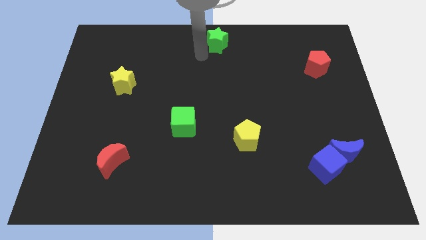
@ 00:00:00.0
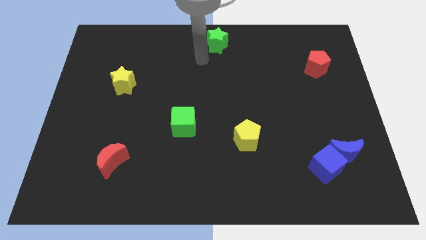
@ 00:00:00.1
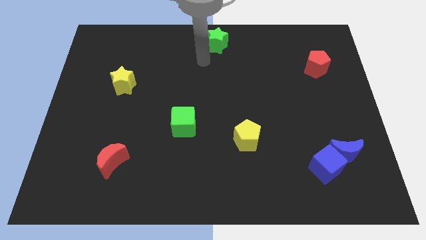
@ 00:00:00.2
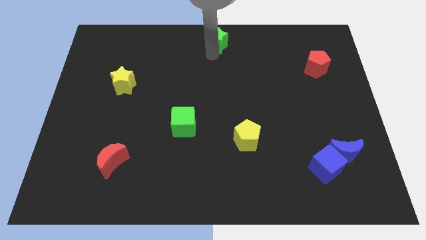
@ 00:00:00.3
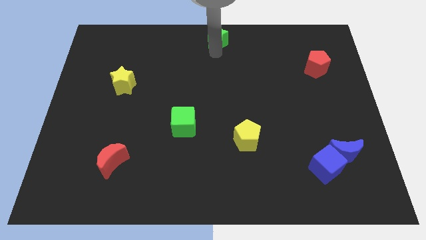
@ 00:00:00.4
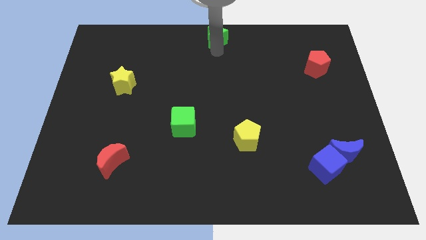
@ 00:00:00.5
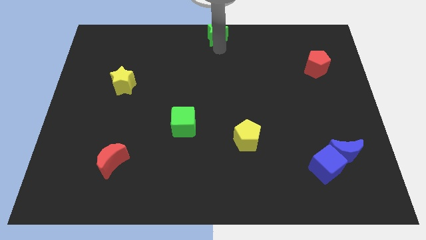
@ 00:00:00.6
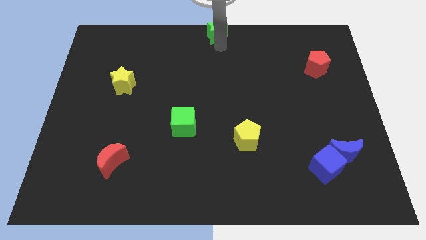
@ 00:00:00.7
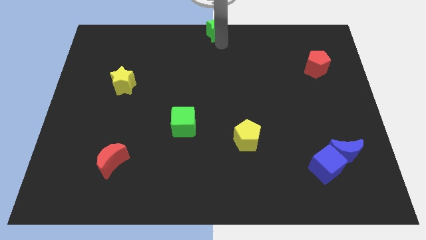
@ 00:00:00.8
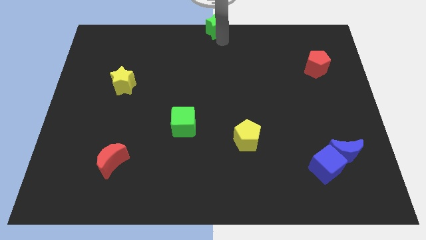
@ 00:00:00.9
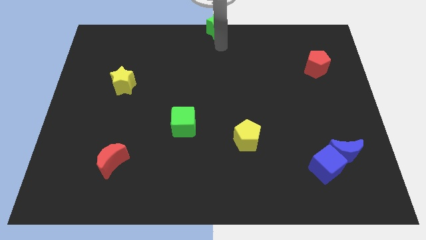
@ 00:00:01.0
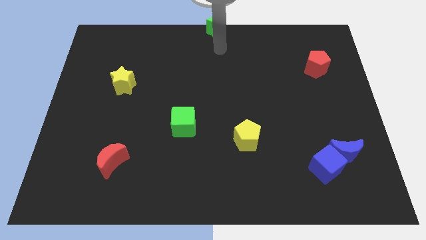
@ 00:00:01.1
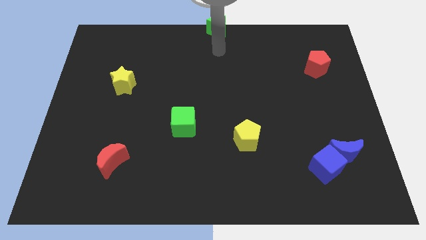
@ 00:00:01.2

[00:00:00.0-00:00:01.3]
put the green star at the top center of the board

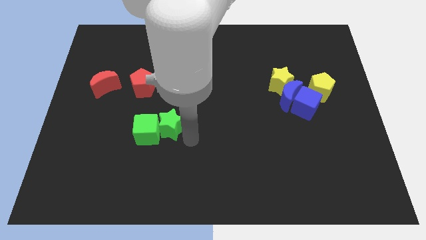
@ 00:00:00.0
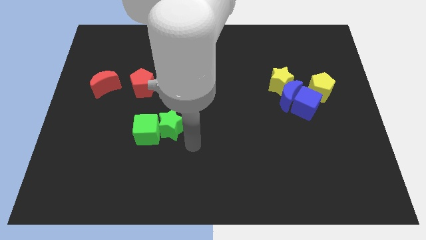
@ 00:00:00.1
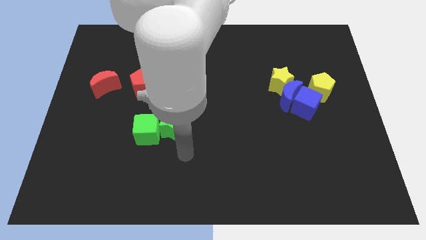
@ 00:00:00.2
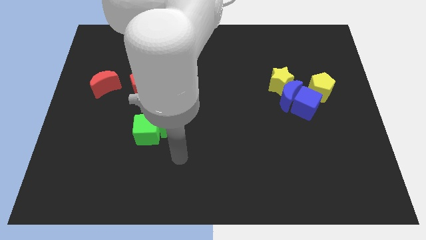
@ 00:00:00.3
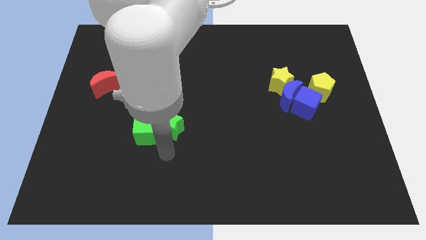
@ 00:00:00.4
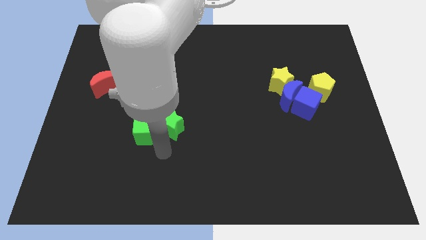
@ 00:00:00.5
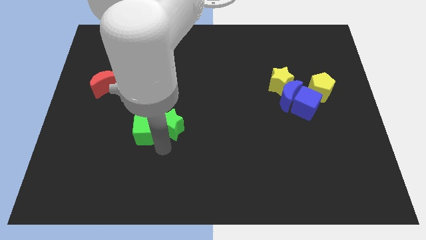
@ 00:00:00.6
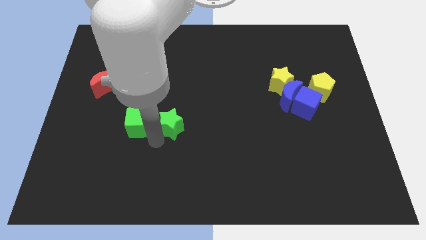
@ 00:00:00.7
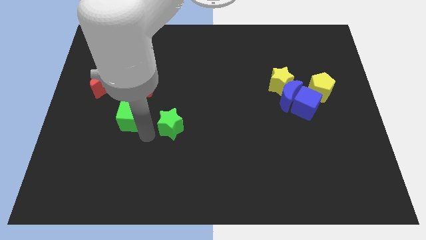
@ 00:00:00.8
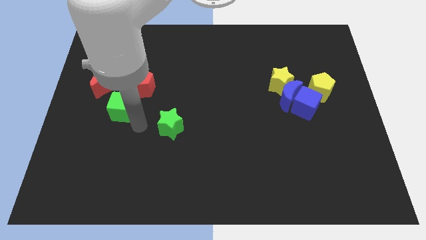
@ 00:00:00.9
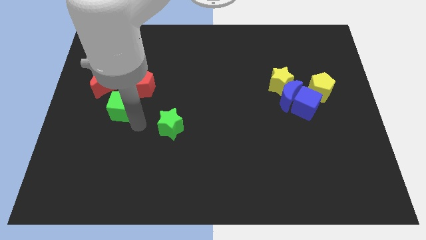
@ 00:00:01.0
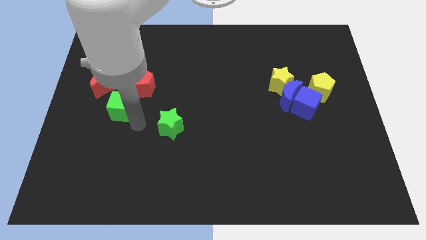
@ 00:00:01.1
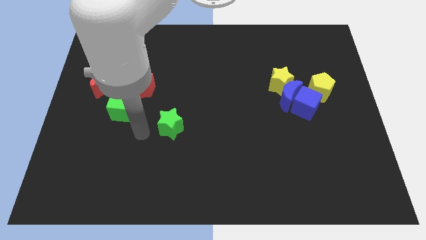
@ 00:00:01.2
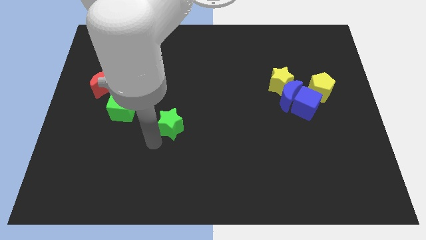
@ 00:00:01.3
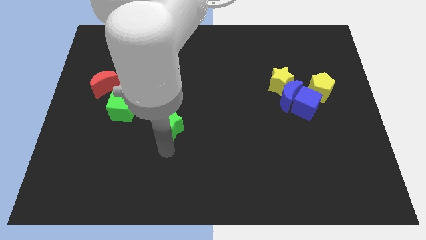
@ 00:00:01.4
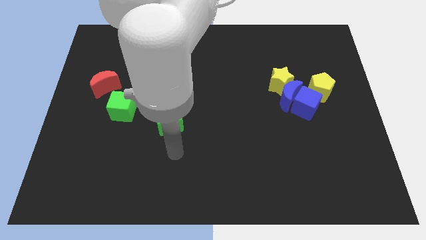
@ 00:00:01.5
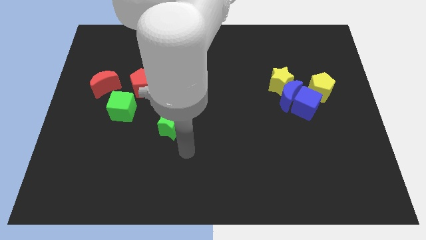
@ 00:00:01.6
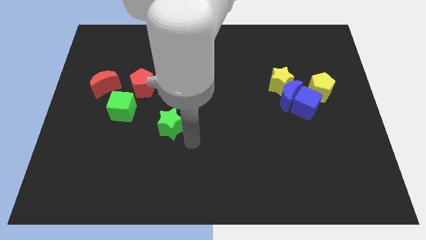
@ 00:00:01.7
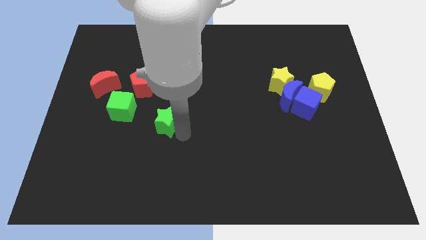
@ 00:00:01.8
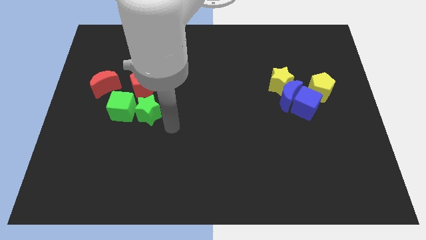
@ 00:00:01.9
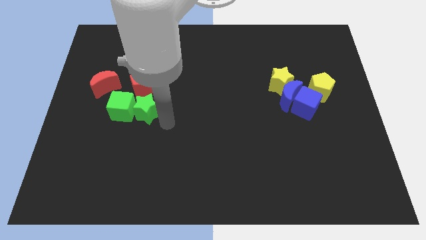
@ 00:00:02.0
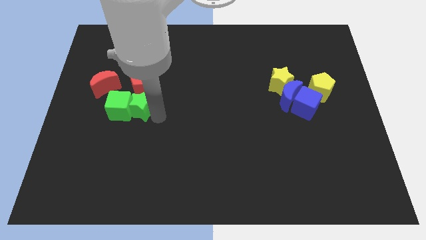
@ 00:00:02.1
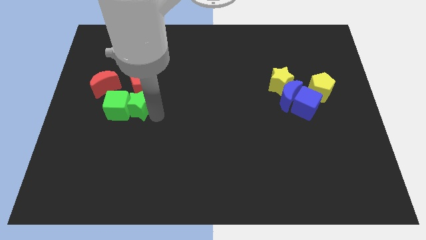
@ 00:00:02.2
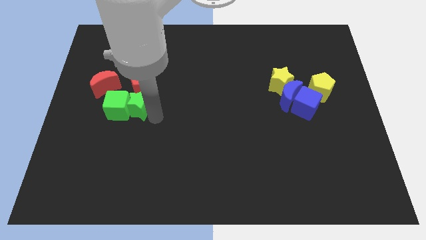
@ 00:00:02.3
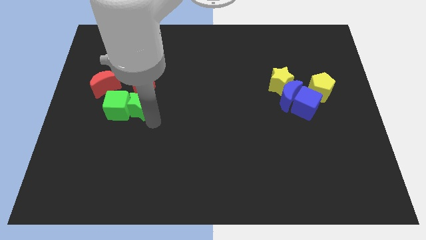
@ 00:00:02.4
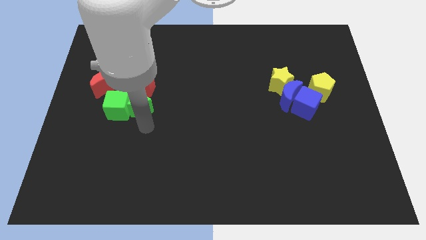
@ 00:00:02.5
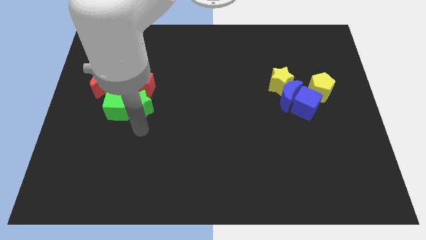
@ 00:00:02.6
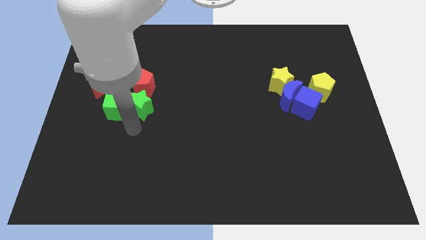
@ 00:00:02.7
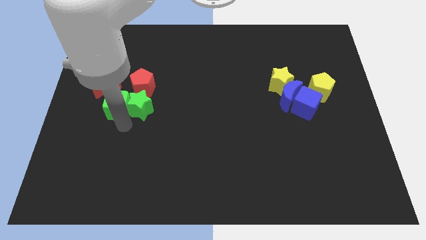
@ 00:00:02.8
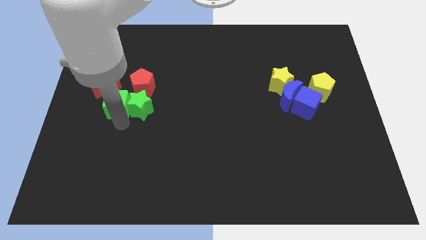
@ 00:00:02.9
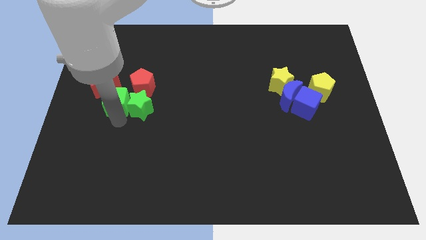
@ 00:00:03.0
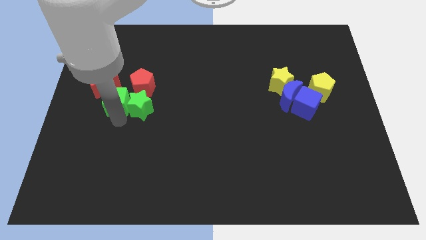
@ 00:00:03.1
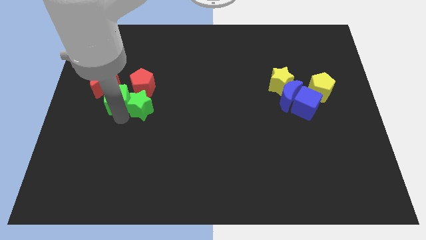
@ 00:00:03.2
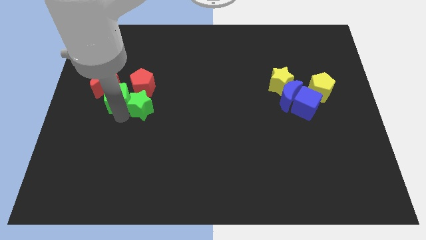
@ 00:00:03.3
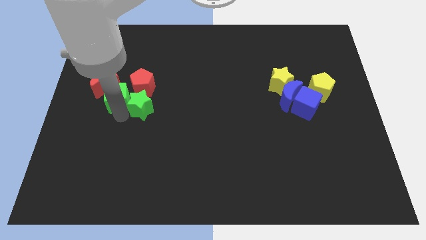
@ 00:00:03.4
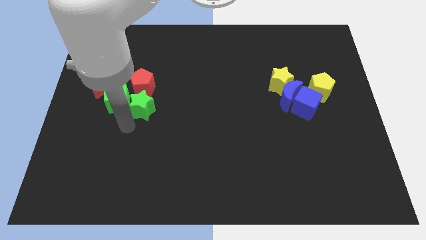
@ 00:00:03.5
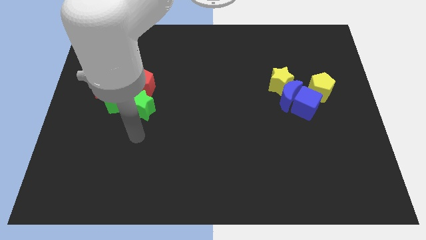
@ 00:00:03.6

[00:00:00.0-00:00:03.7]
place the green cube below the red crescent

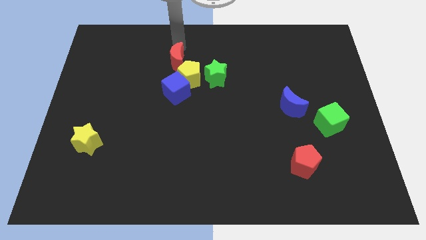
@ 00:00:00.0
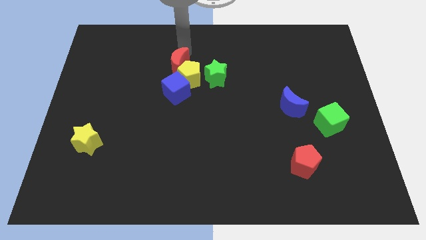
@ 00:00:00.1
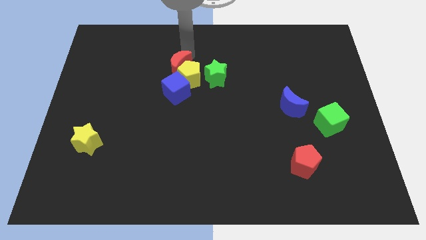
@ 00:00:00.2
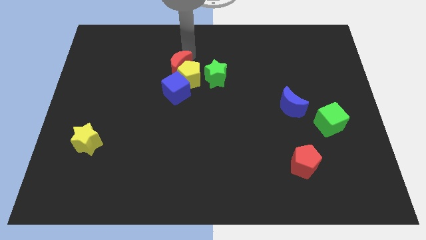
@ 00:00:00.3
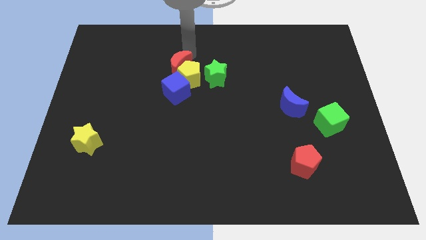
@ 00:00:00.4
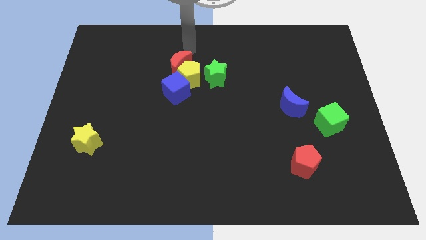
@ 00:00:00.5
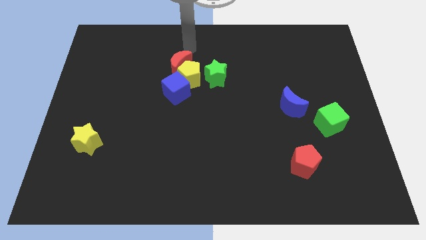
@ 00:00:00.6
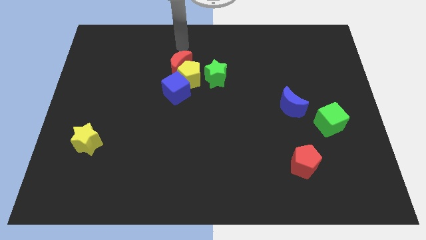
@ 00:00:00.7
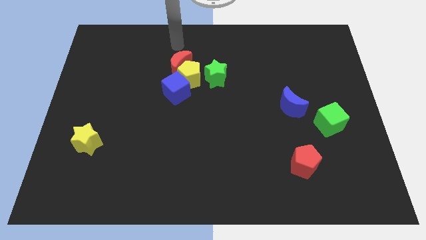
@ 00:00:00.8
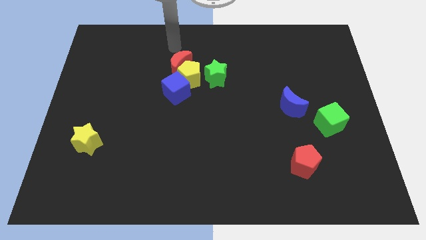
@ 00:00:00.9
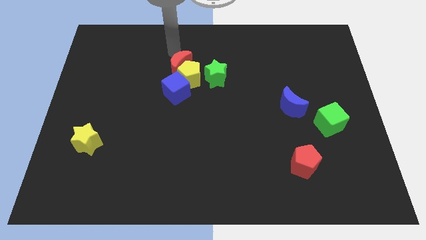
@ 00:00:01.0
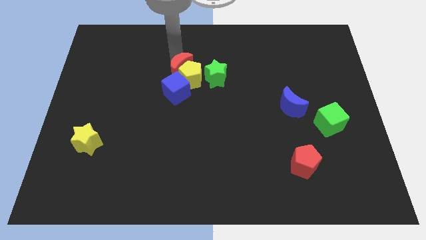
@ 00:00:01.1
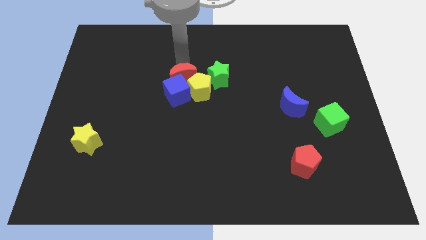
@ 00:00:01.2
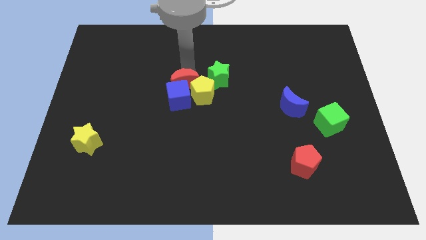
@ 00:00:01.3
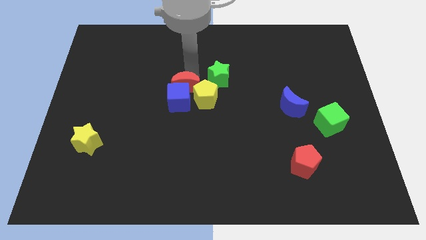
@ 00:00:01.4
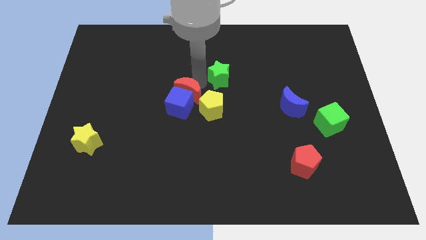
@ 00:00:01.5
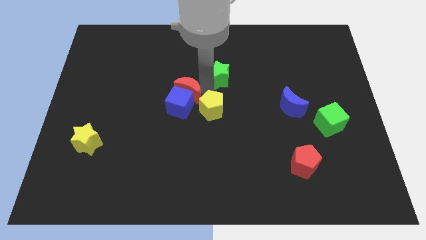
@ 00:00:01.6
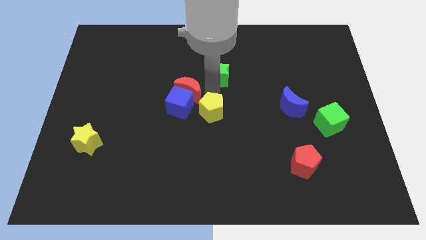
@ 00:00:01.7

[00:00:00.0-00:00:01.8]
push the red crescent into the blue cube

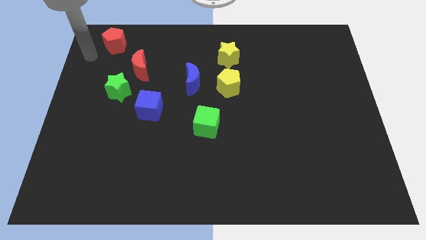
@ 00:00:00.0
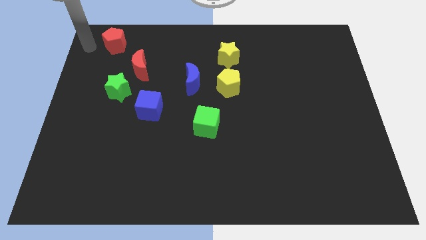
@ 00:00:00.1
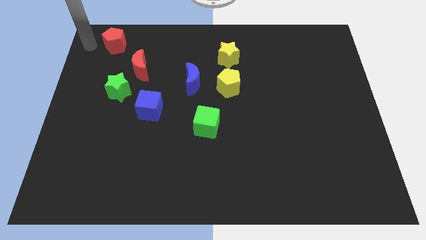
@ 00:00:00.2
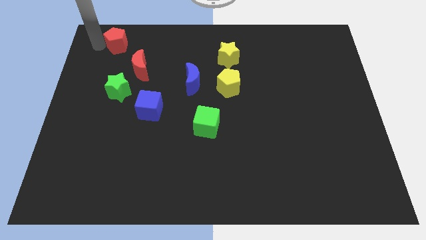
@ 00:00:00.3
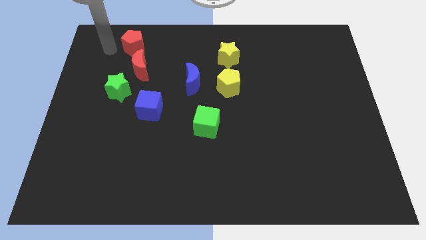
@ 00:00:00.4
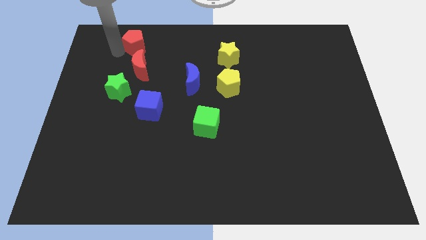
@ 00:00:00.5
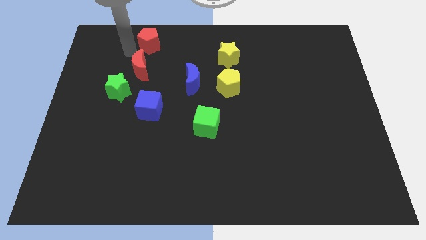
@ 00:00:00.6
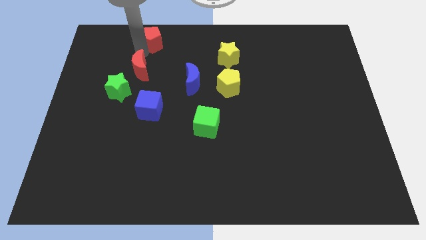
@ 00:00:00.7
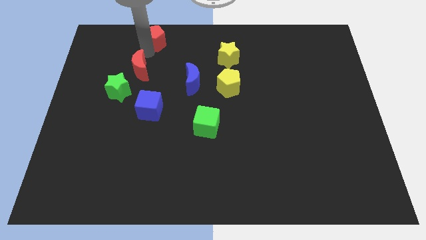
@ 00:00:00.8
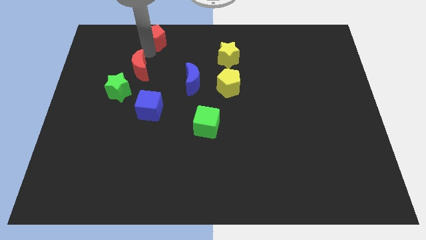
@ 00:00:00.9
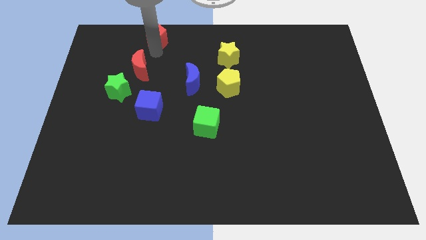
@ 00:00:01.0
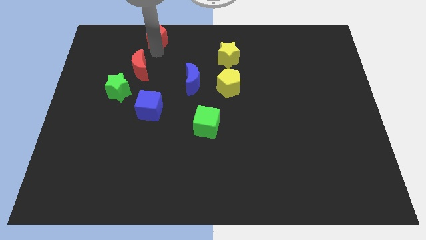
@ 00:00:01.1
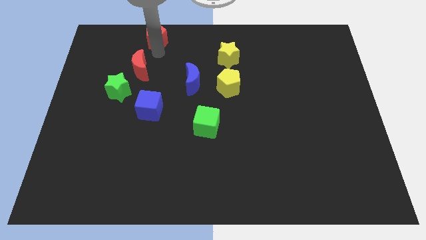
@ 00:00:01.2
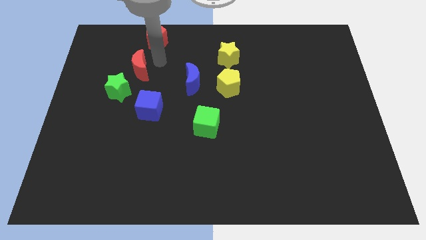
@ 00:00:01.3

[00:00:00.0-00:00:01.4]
place red pentagon above blue cube

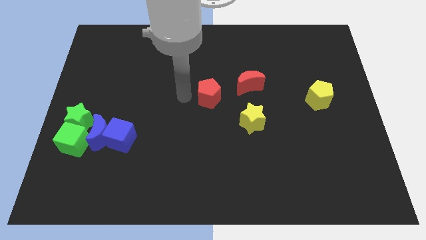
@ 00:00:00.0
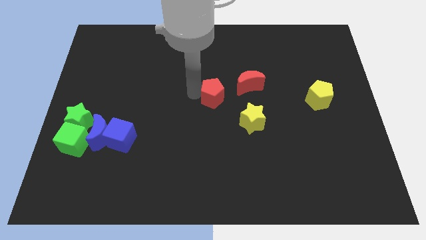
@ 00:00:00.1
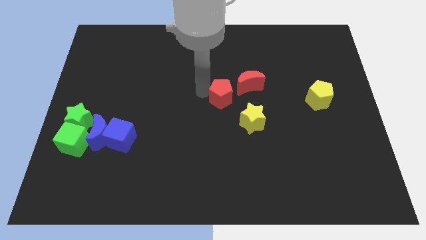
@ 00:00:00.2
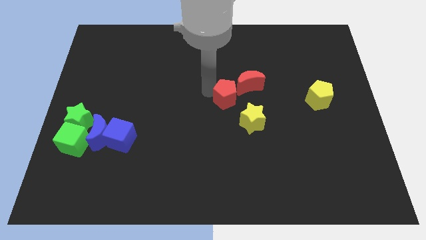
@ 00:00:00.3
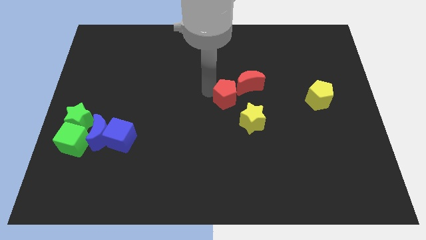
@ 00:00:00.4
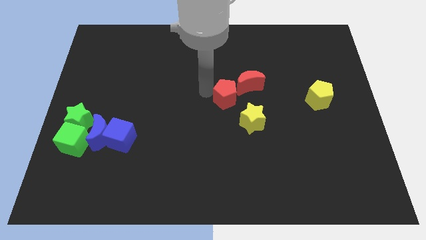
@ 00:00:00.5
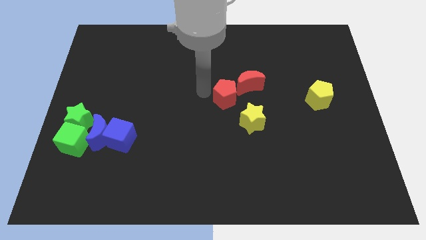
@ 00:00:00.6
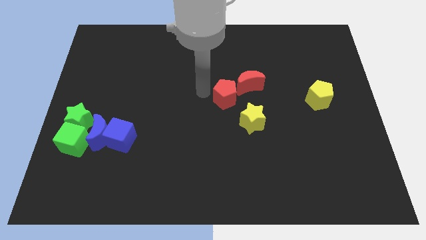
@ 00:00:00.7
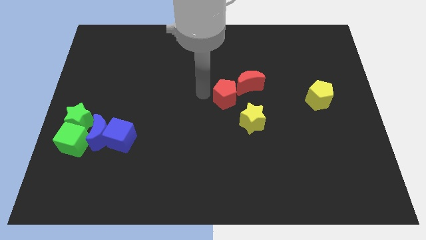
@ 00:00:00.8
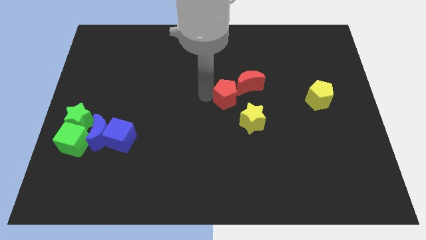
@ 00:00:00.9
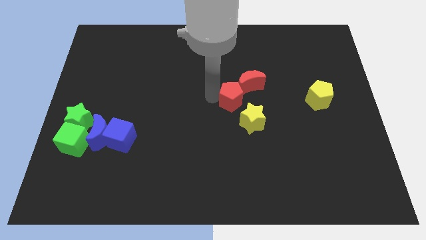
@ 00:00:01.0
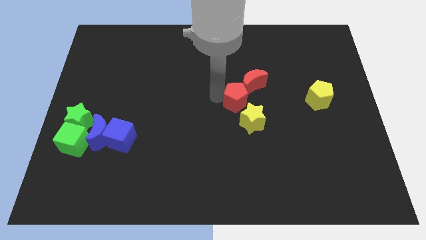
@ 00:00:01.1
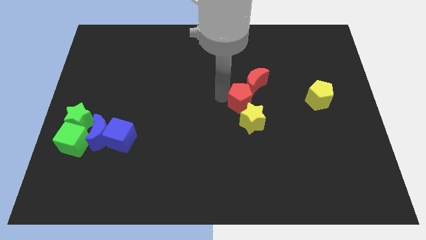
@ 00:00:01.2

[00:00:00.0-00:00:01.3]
push the red pentagon close to the red crescent
